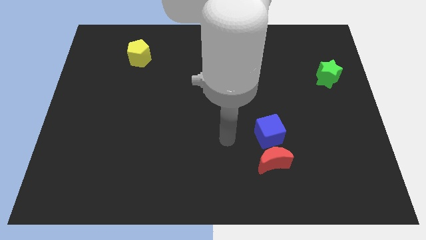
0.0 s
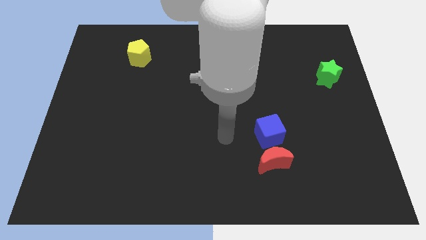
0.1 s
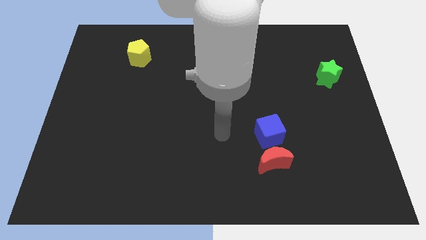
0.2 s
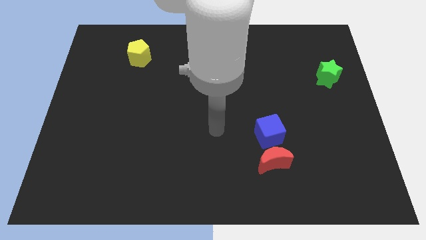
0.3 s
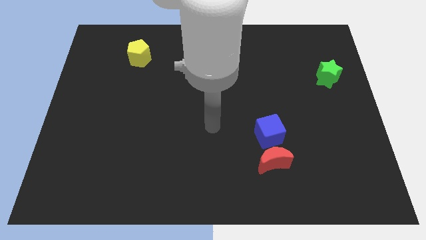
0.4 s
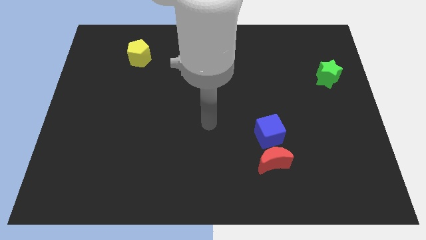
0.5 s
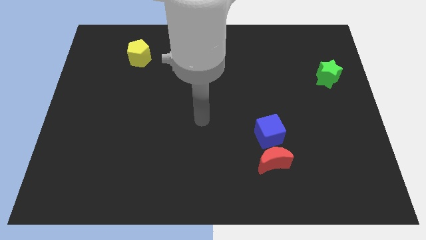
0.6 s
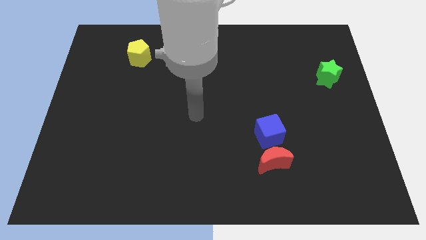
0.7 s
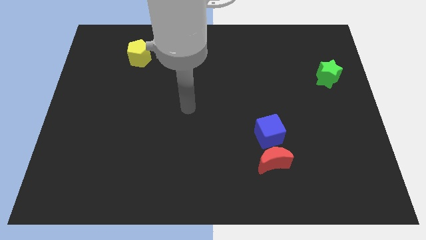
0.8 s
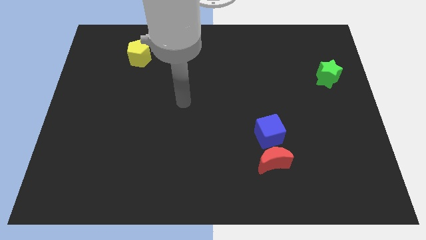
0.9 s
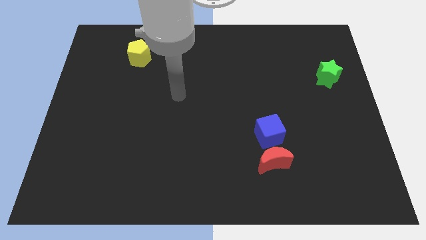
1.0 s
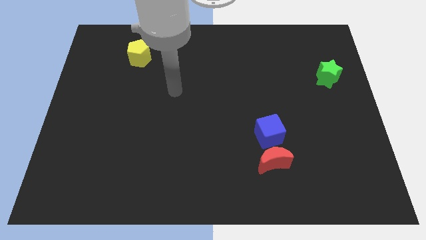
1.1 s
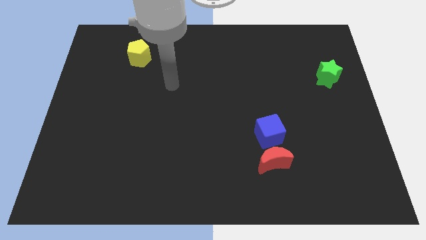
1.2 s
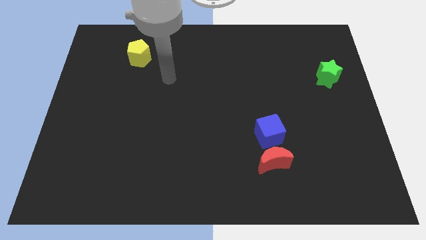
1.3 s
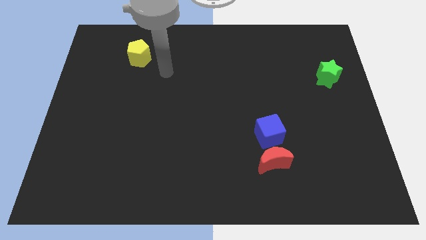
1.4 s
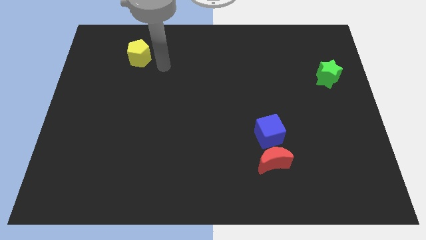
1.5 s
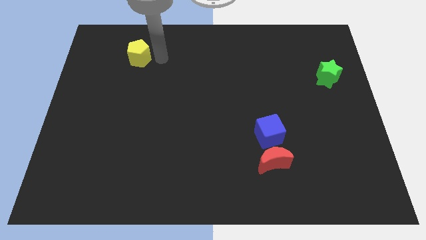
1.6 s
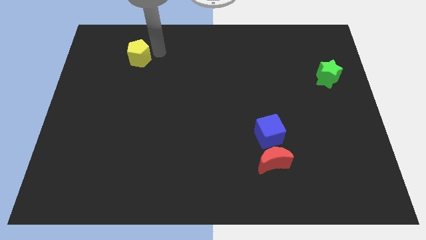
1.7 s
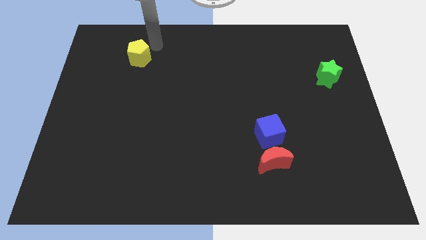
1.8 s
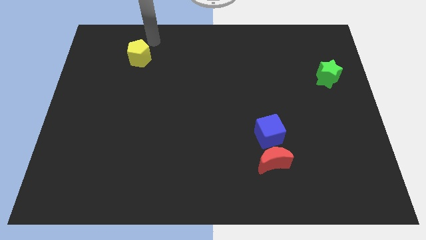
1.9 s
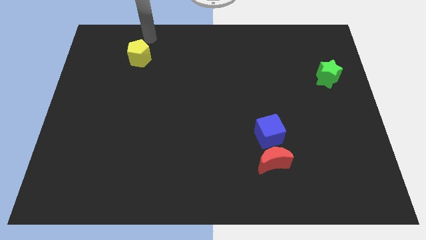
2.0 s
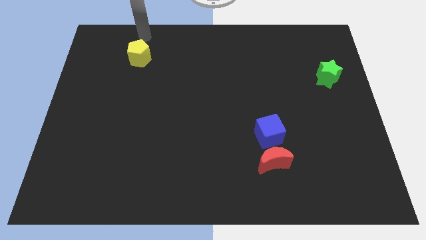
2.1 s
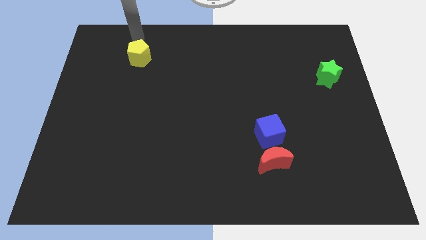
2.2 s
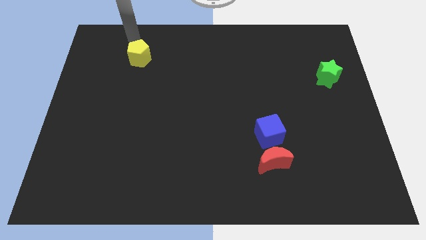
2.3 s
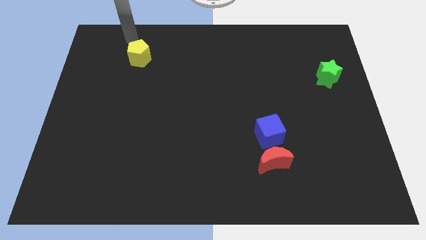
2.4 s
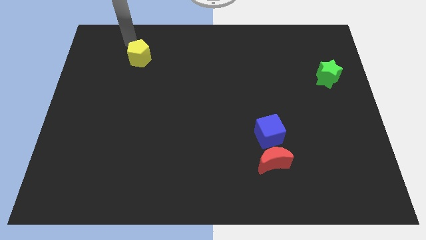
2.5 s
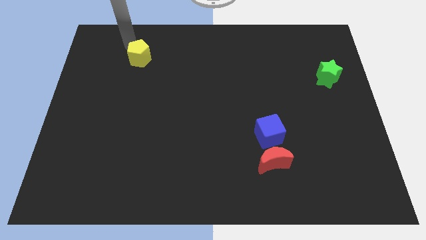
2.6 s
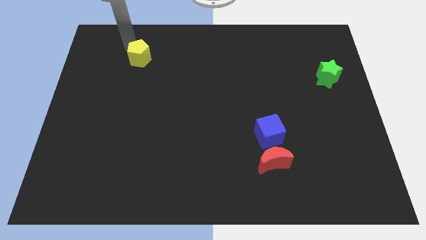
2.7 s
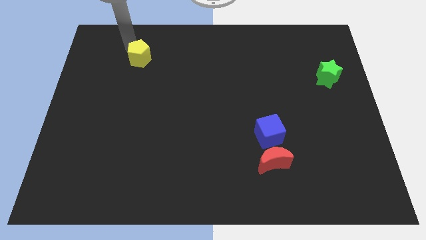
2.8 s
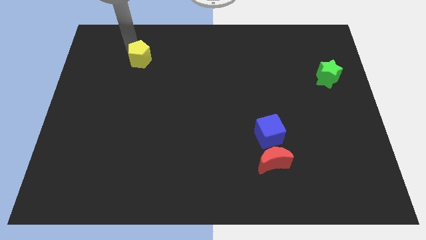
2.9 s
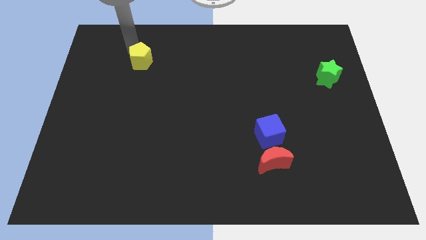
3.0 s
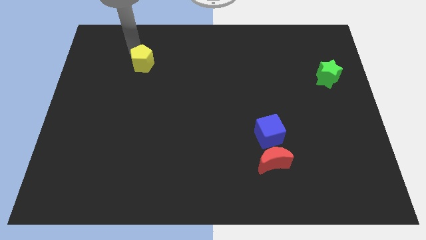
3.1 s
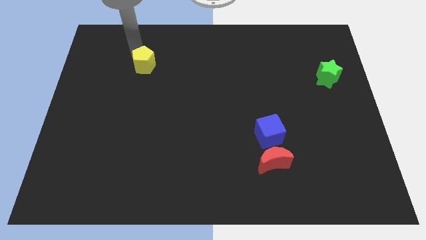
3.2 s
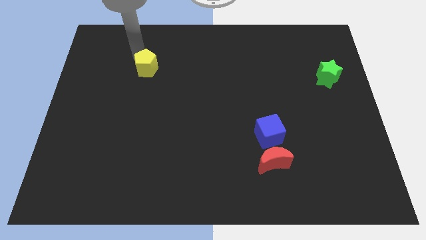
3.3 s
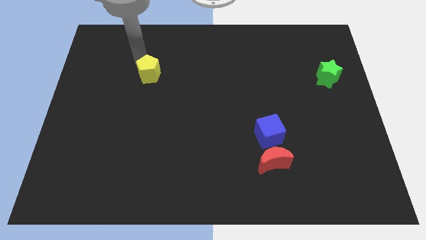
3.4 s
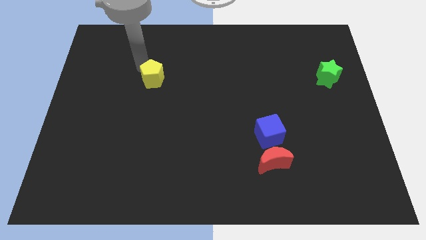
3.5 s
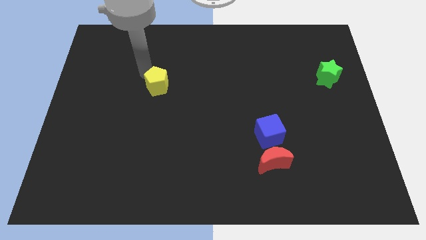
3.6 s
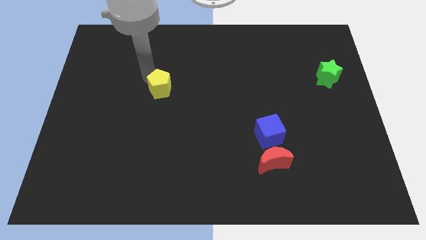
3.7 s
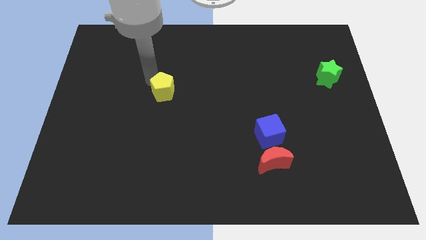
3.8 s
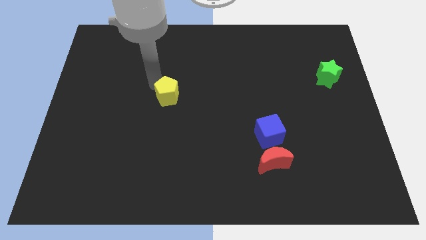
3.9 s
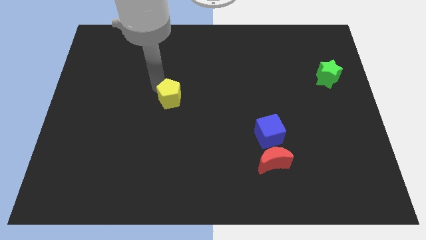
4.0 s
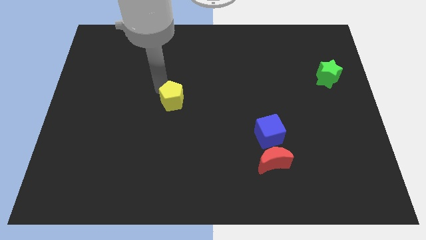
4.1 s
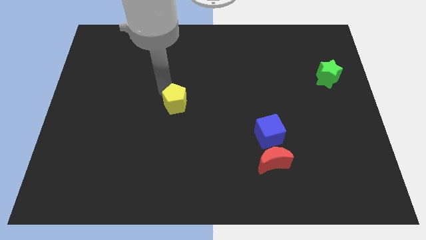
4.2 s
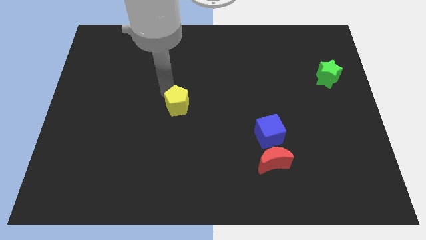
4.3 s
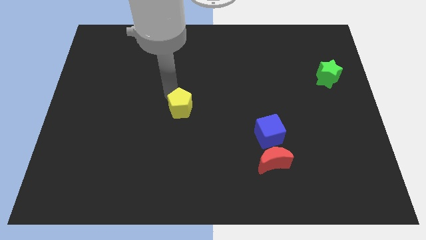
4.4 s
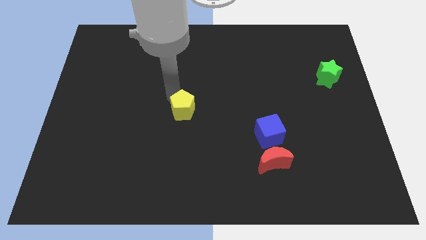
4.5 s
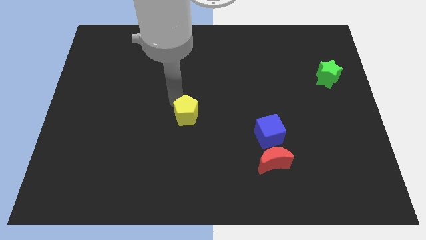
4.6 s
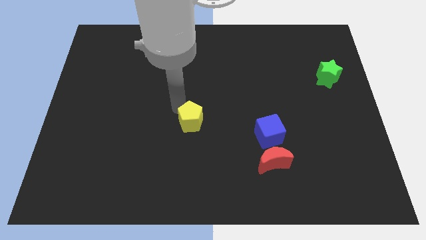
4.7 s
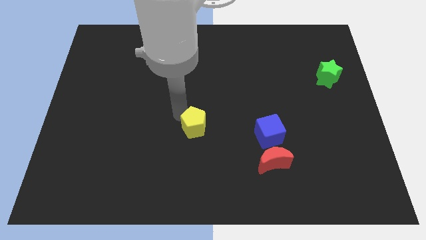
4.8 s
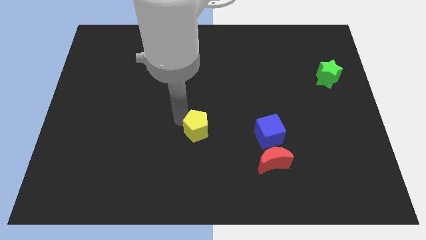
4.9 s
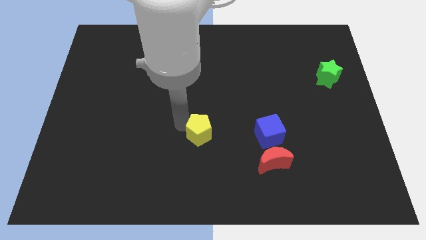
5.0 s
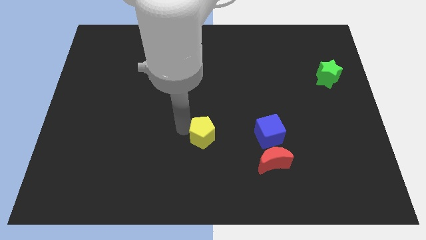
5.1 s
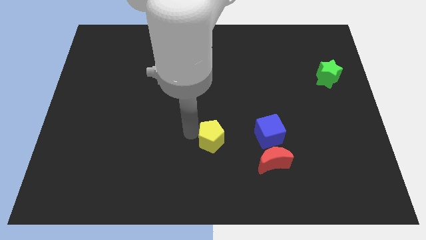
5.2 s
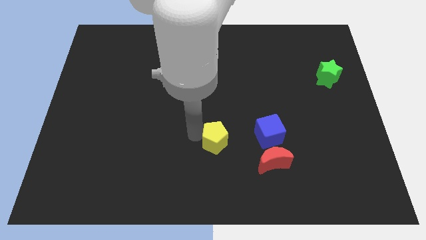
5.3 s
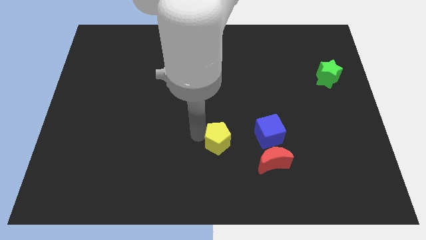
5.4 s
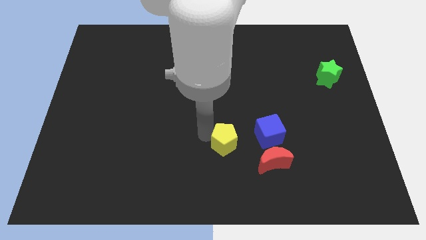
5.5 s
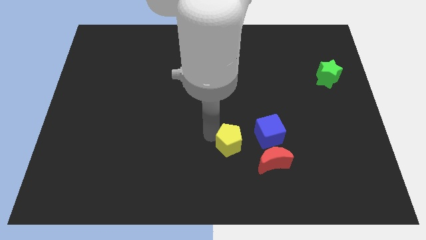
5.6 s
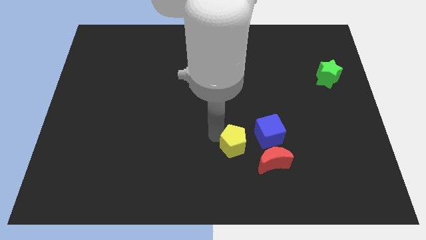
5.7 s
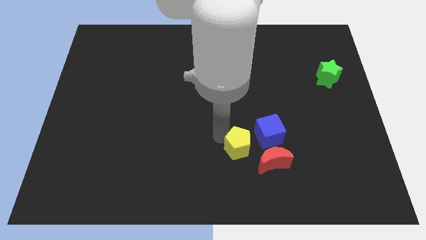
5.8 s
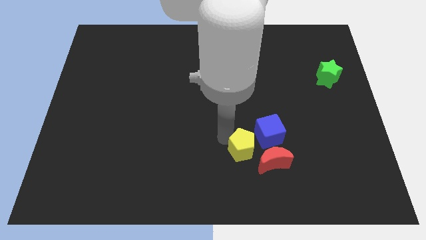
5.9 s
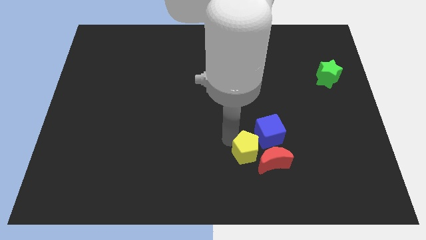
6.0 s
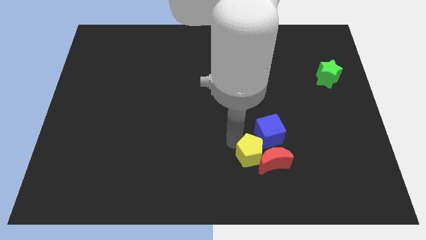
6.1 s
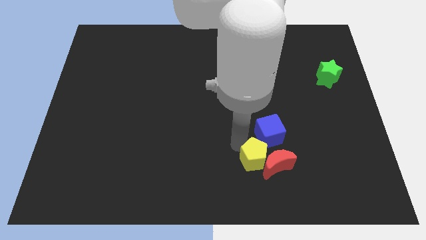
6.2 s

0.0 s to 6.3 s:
move the yellow block to the red block

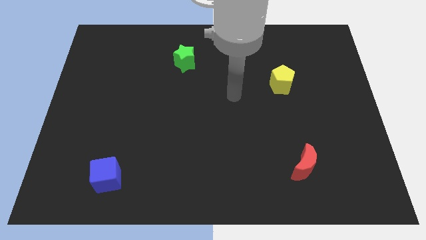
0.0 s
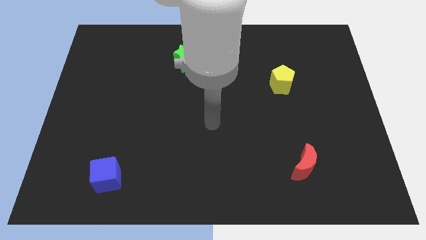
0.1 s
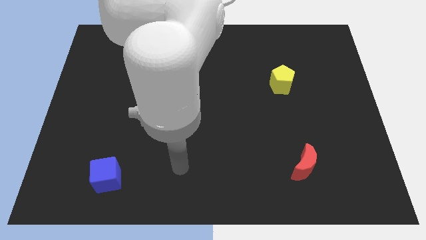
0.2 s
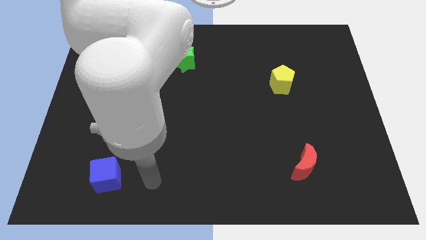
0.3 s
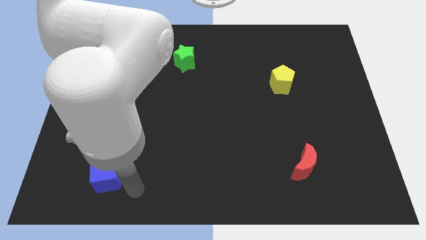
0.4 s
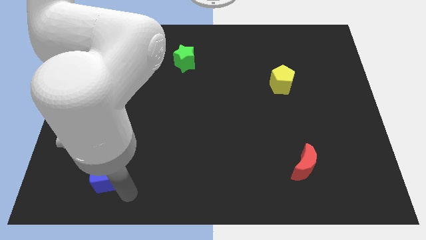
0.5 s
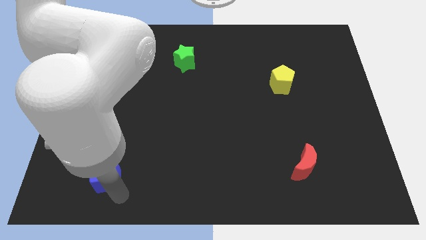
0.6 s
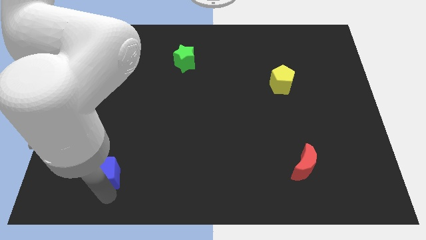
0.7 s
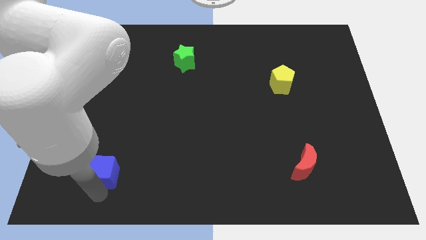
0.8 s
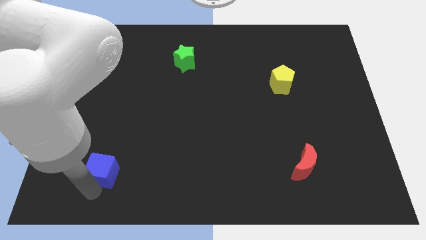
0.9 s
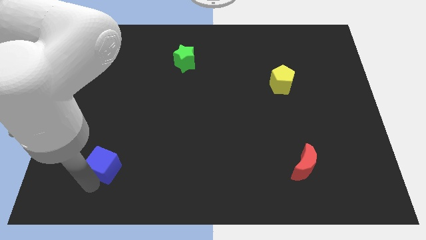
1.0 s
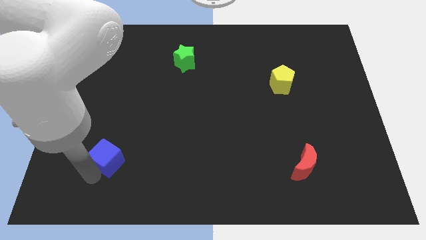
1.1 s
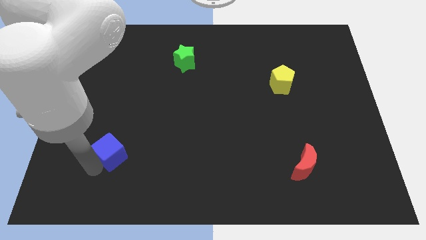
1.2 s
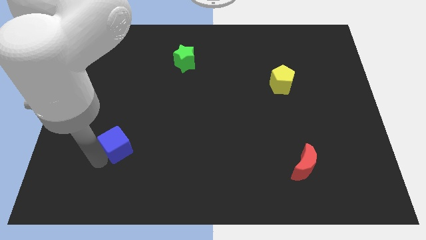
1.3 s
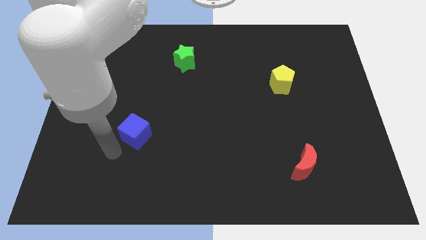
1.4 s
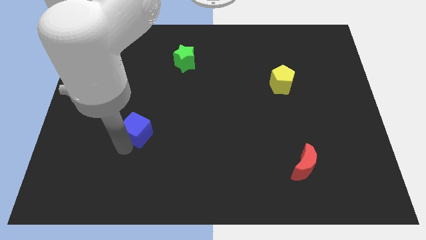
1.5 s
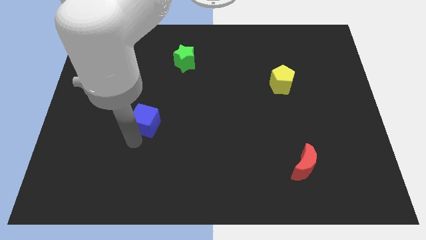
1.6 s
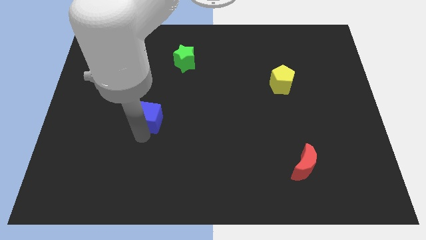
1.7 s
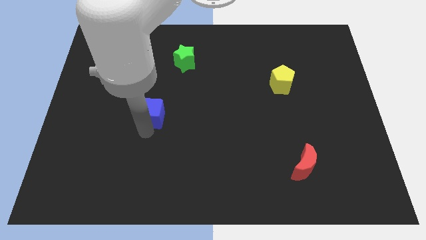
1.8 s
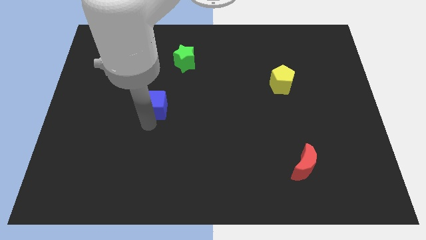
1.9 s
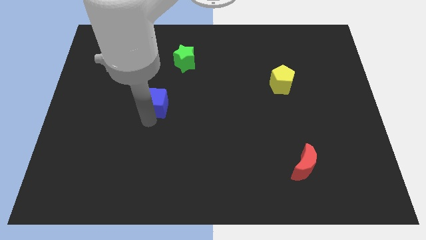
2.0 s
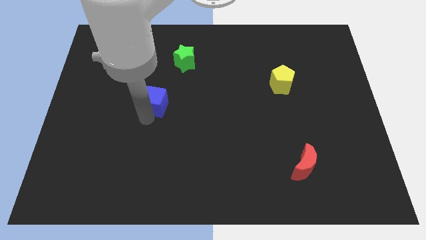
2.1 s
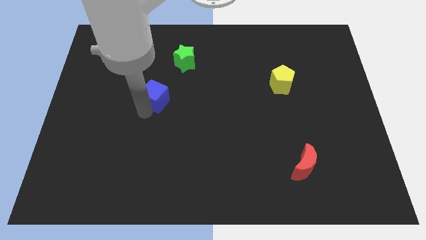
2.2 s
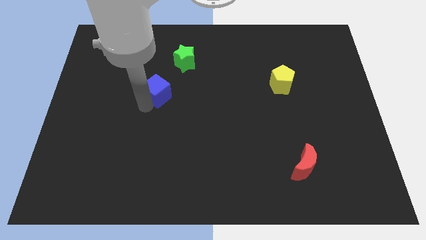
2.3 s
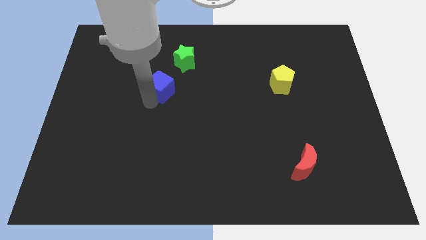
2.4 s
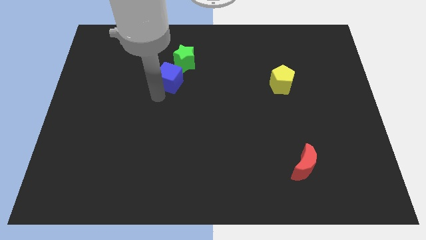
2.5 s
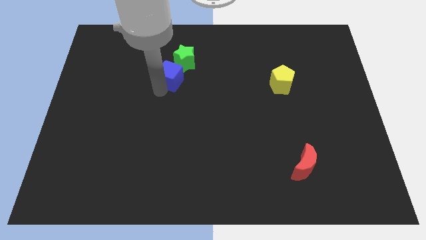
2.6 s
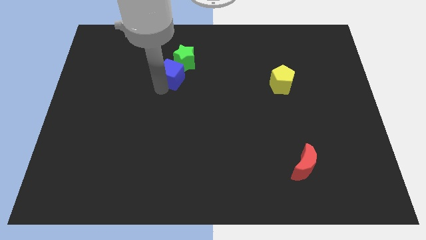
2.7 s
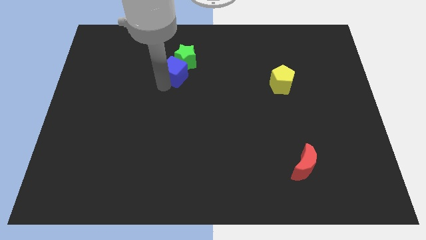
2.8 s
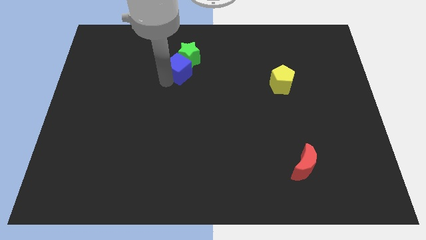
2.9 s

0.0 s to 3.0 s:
move the blue cube towards the green block
